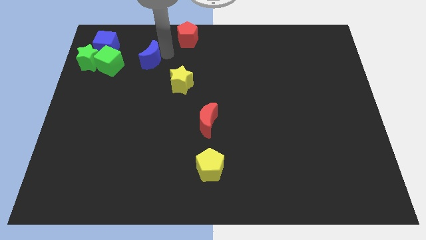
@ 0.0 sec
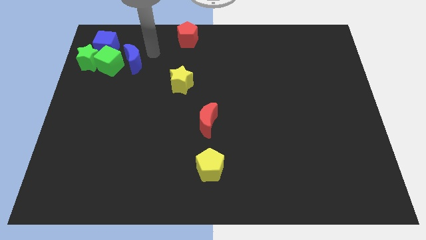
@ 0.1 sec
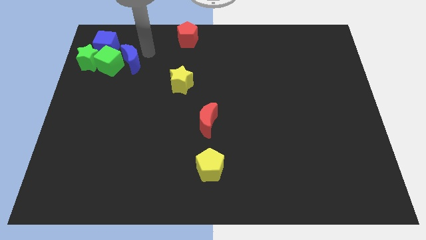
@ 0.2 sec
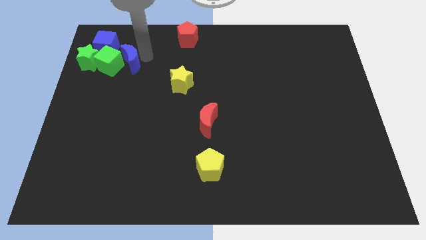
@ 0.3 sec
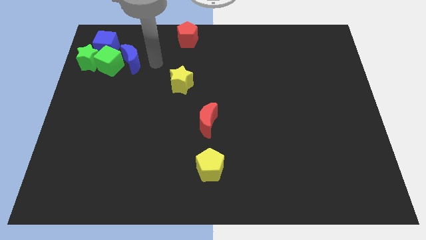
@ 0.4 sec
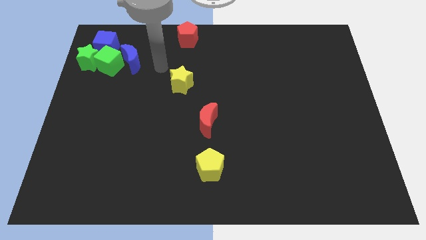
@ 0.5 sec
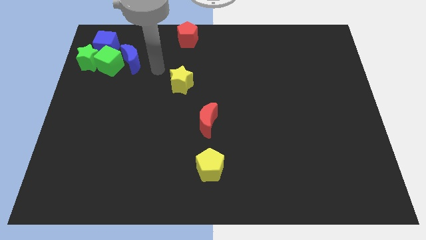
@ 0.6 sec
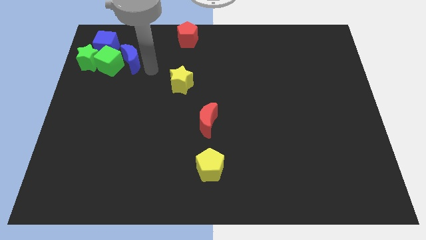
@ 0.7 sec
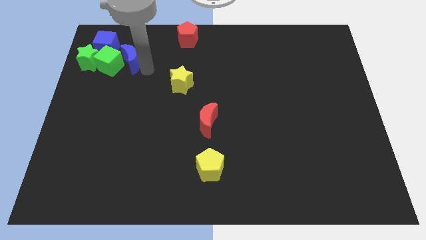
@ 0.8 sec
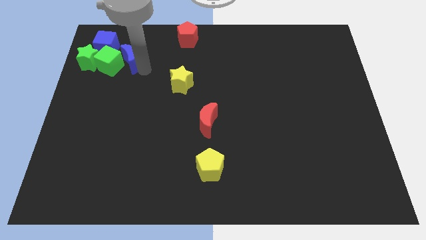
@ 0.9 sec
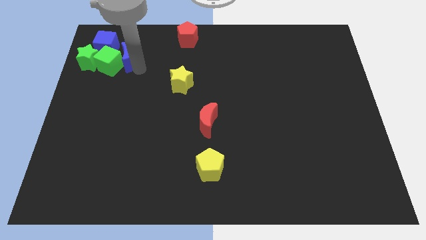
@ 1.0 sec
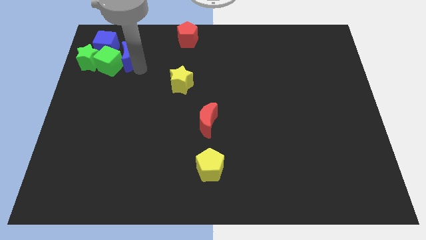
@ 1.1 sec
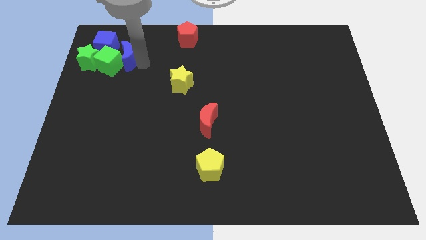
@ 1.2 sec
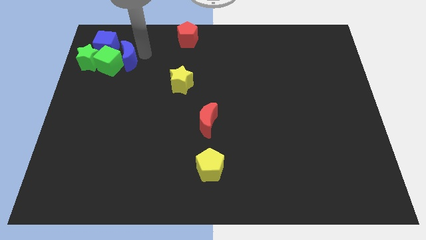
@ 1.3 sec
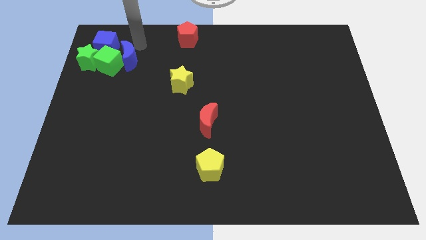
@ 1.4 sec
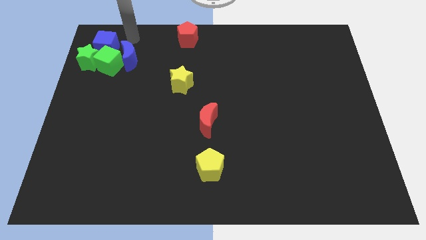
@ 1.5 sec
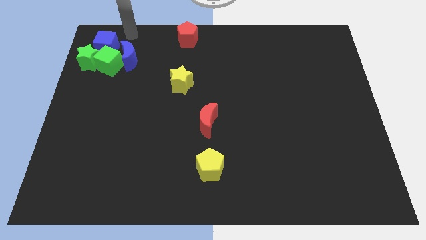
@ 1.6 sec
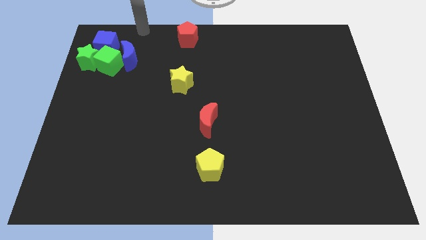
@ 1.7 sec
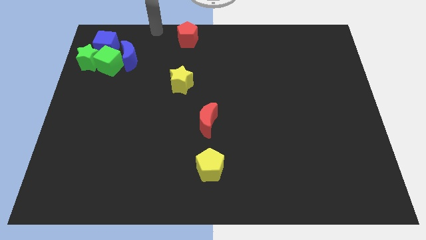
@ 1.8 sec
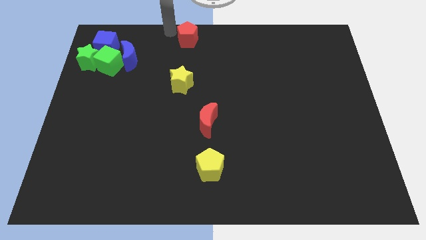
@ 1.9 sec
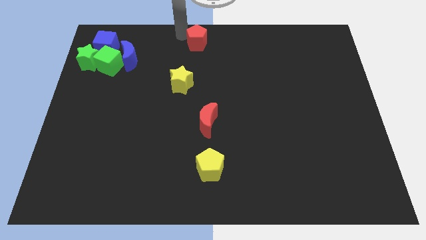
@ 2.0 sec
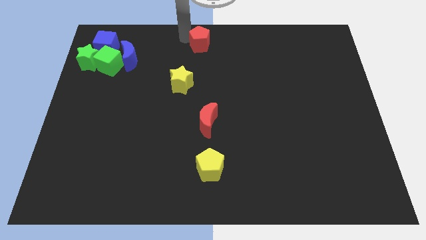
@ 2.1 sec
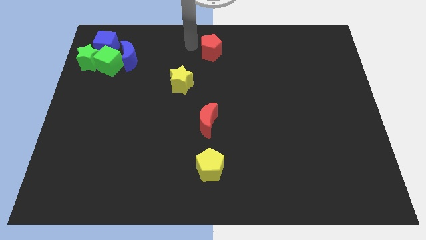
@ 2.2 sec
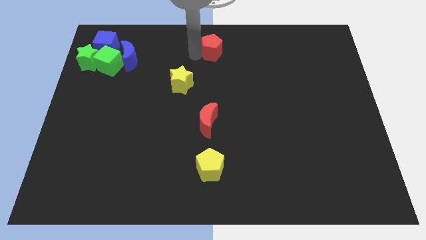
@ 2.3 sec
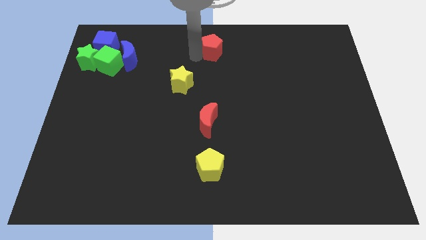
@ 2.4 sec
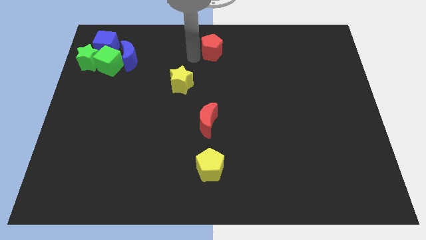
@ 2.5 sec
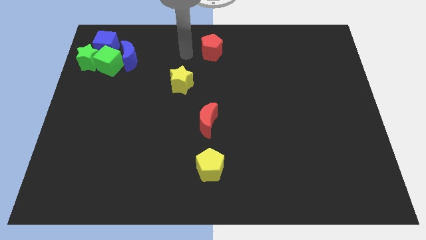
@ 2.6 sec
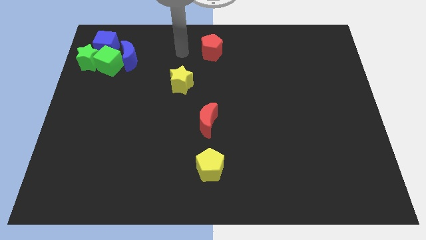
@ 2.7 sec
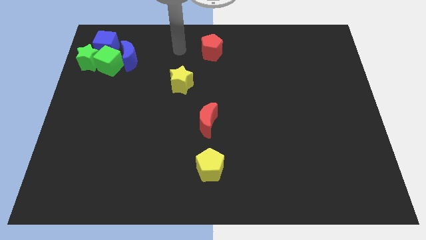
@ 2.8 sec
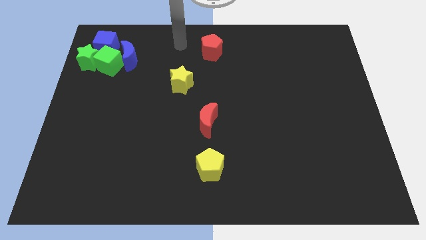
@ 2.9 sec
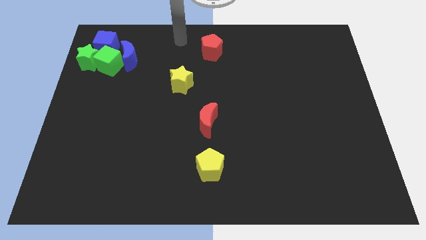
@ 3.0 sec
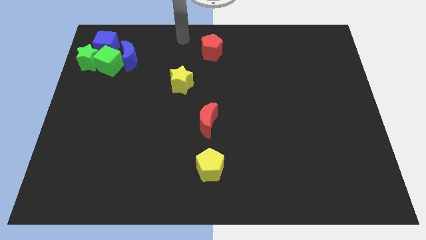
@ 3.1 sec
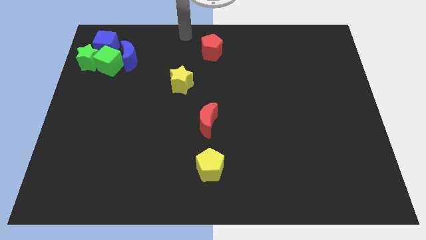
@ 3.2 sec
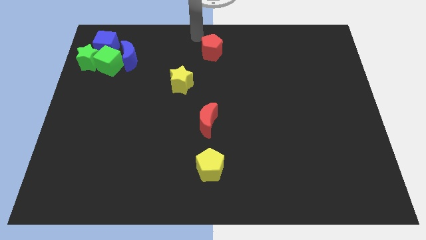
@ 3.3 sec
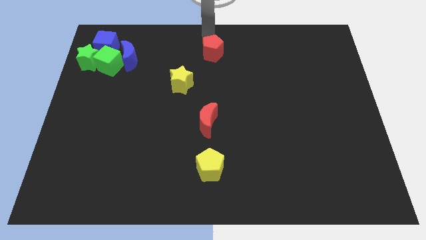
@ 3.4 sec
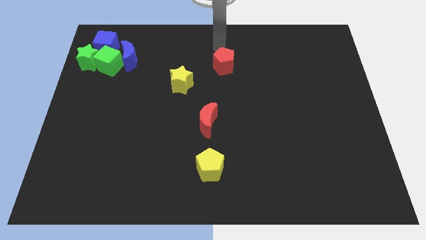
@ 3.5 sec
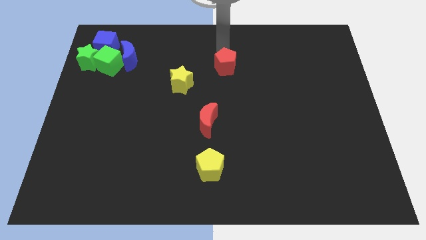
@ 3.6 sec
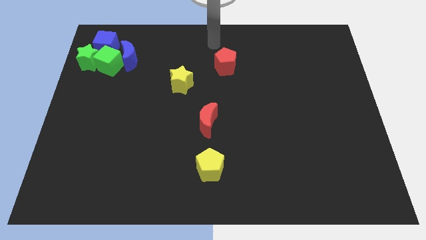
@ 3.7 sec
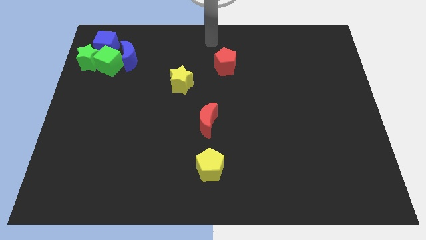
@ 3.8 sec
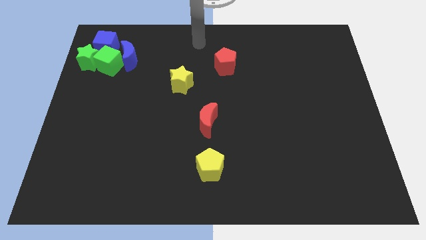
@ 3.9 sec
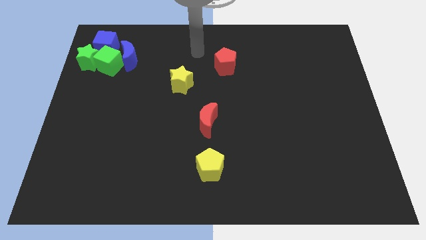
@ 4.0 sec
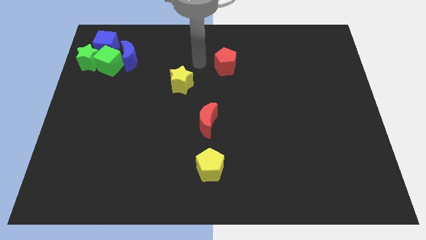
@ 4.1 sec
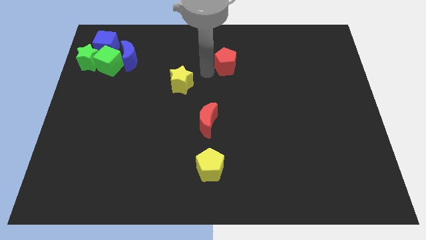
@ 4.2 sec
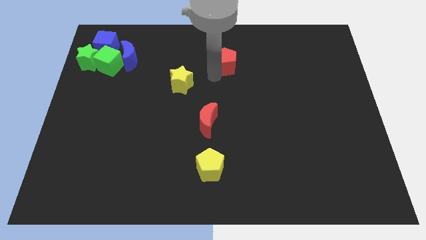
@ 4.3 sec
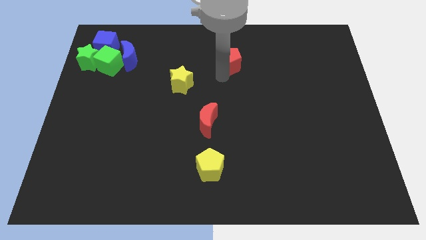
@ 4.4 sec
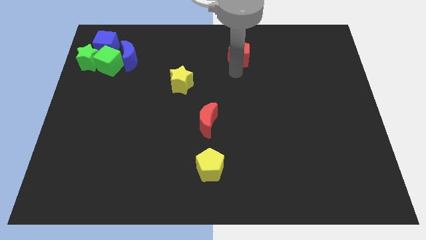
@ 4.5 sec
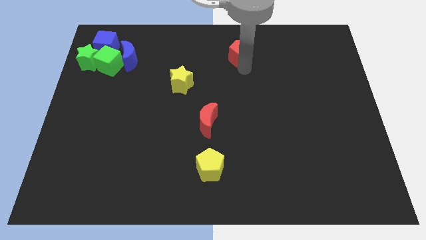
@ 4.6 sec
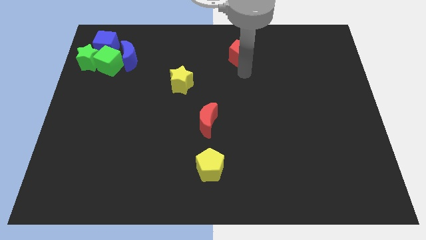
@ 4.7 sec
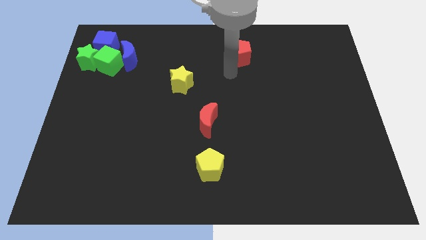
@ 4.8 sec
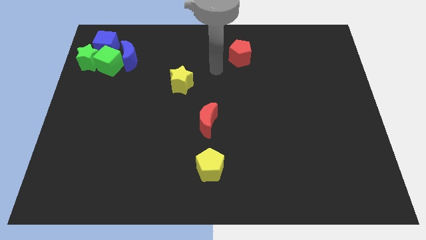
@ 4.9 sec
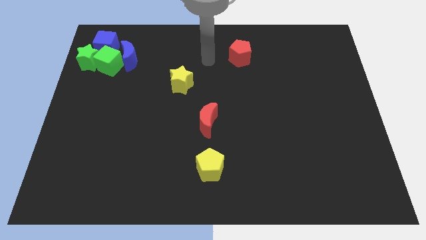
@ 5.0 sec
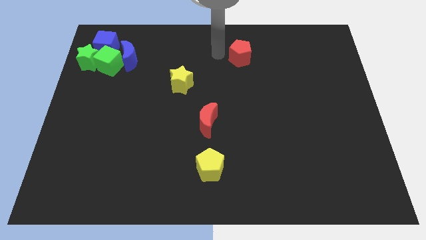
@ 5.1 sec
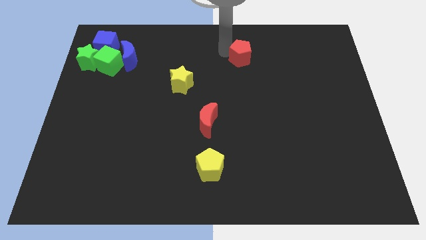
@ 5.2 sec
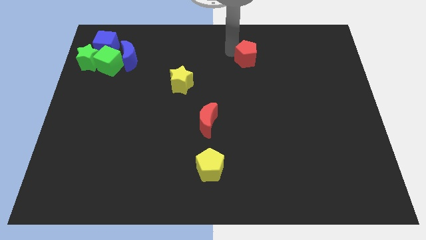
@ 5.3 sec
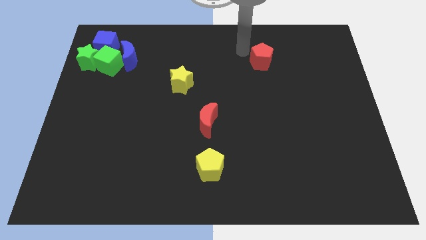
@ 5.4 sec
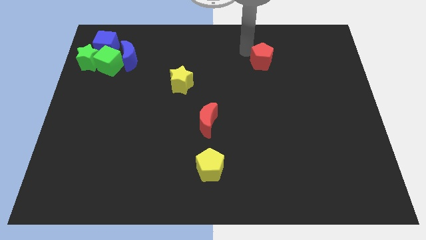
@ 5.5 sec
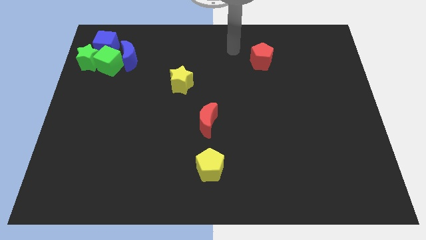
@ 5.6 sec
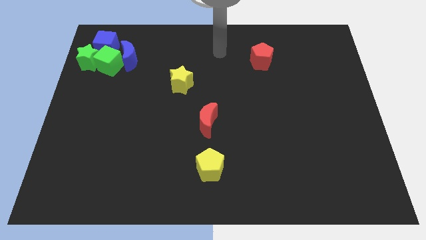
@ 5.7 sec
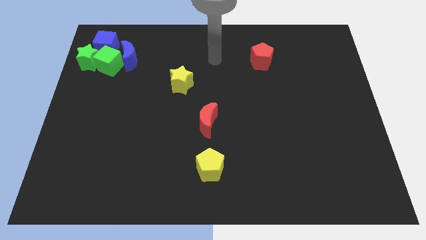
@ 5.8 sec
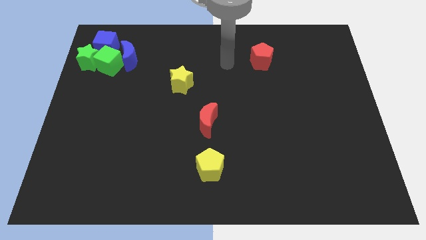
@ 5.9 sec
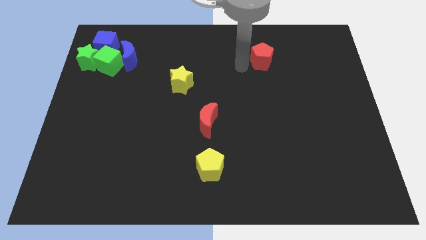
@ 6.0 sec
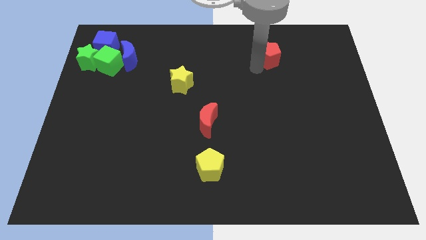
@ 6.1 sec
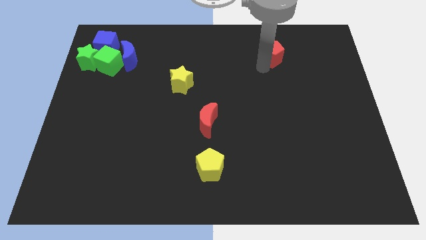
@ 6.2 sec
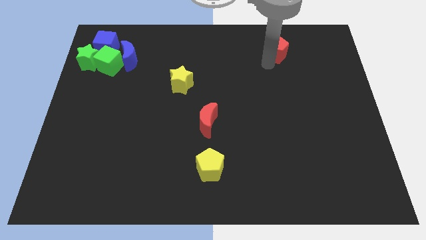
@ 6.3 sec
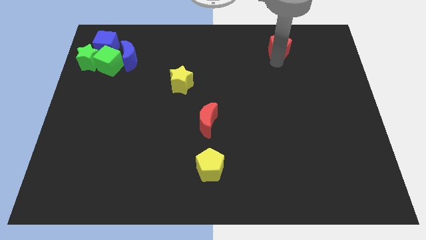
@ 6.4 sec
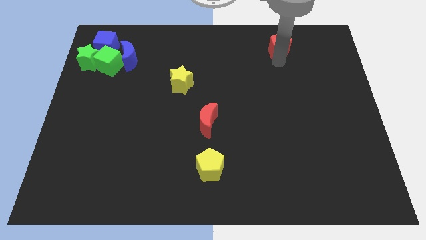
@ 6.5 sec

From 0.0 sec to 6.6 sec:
push the red pentagon towards the top side of the board

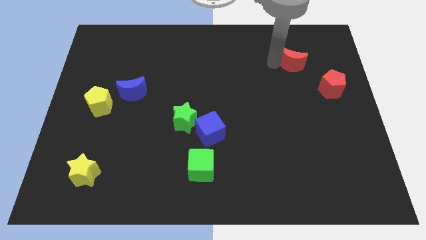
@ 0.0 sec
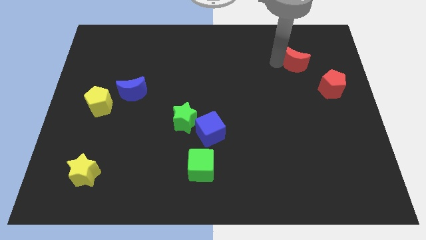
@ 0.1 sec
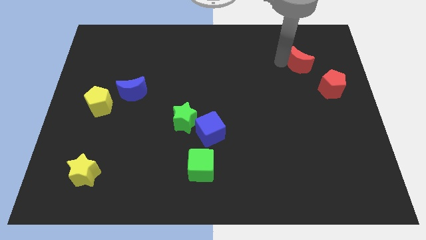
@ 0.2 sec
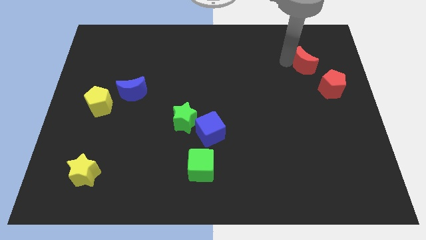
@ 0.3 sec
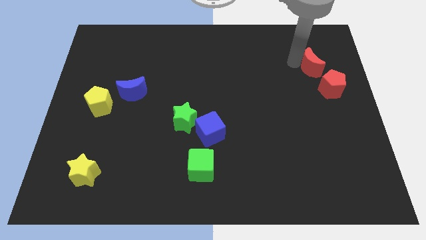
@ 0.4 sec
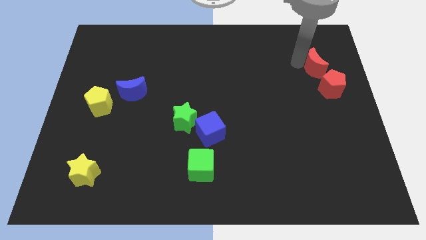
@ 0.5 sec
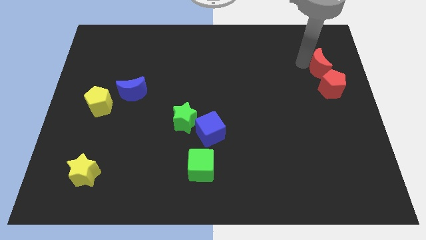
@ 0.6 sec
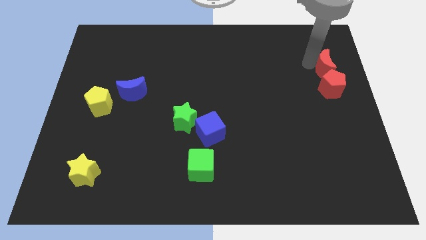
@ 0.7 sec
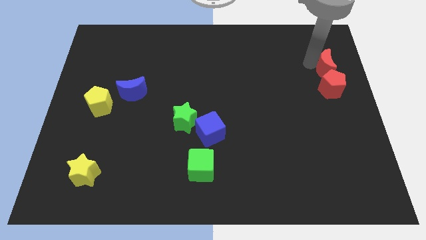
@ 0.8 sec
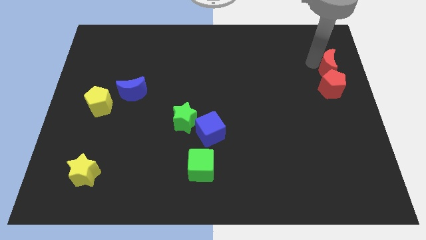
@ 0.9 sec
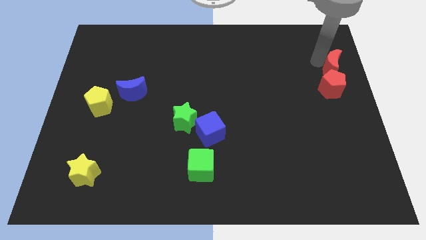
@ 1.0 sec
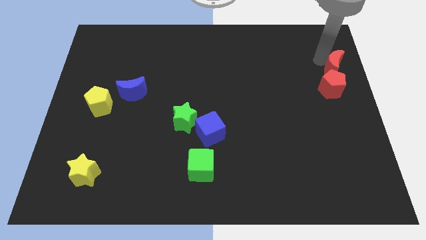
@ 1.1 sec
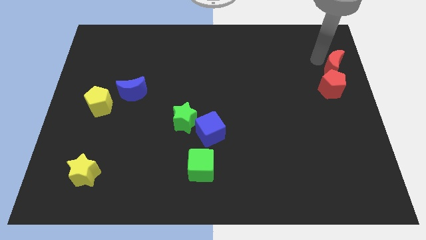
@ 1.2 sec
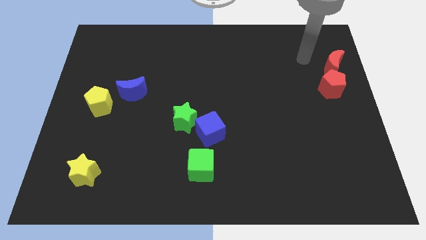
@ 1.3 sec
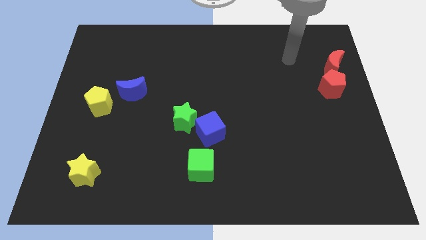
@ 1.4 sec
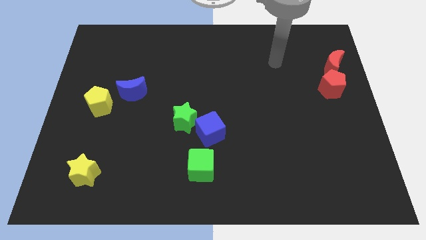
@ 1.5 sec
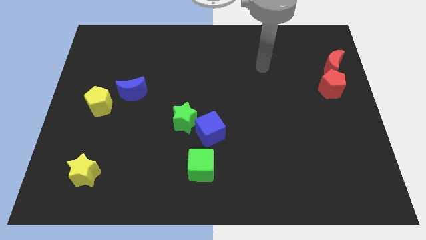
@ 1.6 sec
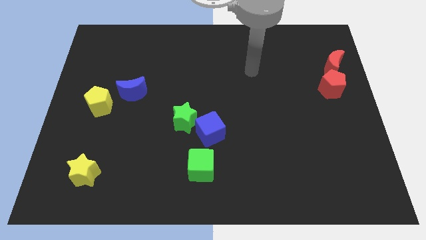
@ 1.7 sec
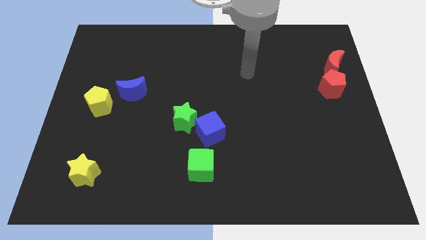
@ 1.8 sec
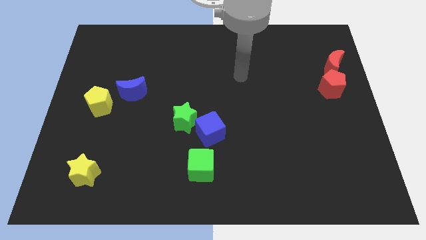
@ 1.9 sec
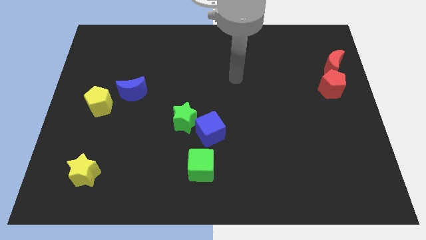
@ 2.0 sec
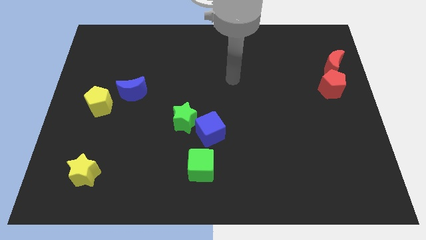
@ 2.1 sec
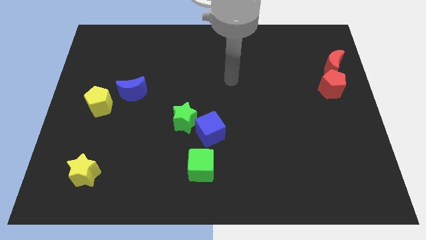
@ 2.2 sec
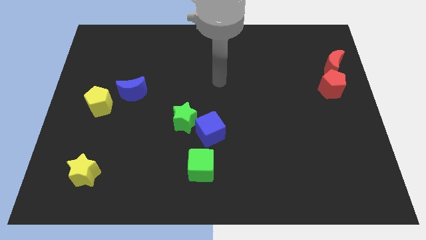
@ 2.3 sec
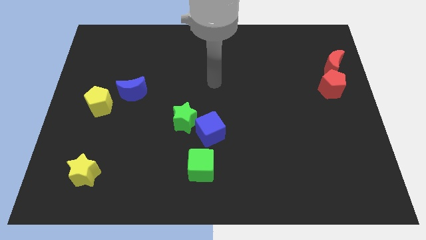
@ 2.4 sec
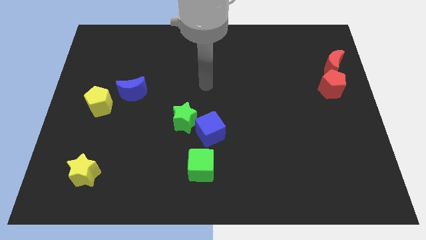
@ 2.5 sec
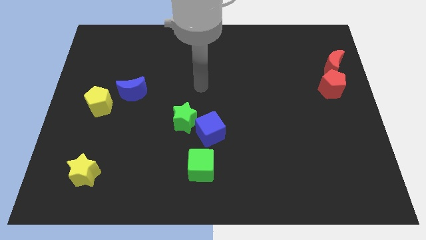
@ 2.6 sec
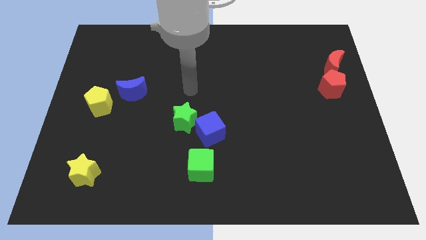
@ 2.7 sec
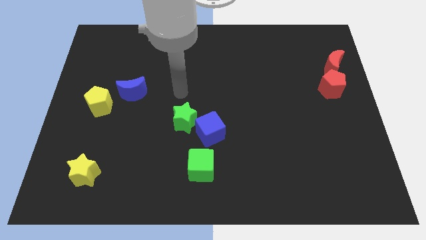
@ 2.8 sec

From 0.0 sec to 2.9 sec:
place red moon above the red pentagon
